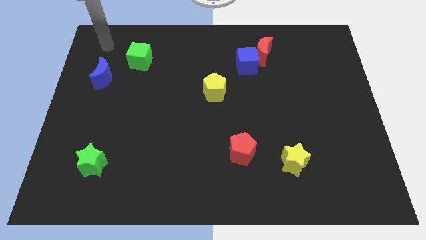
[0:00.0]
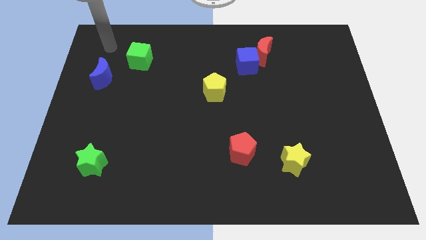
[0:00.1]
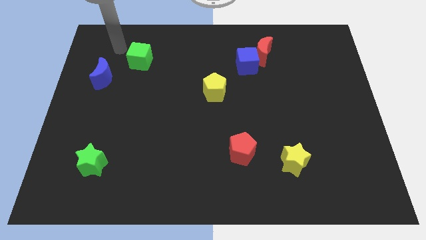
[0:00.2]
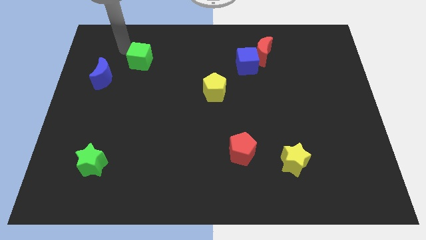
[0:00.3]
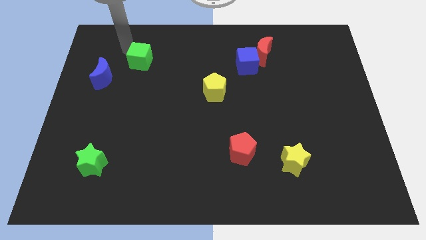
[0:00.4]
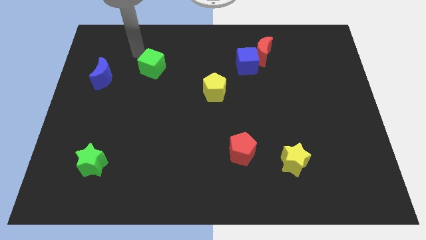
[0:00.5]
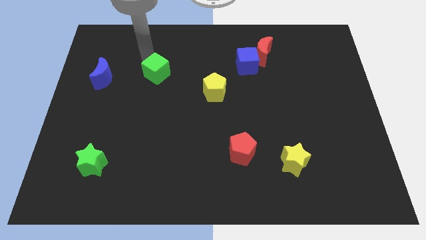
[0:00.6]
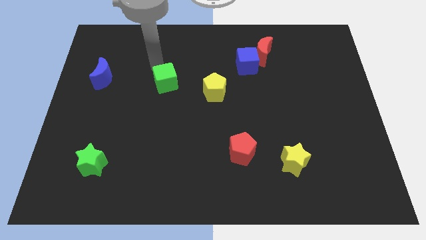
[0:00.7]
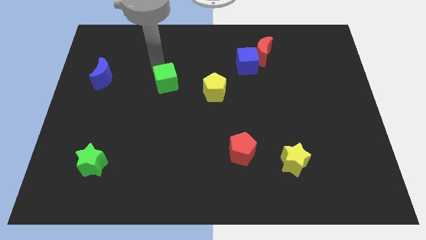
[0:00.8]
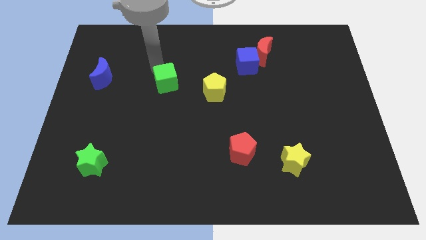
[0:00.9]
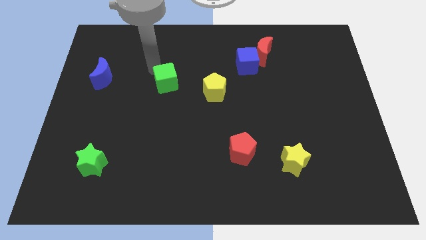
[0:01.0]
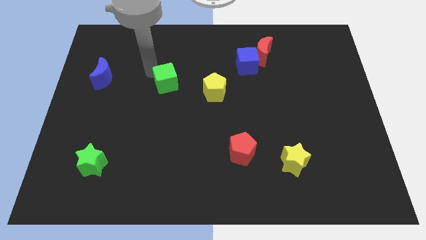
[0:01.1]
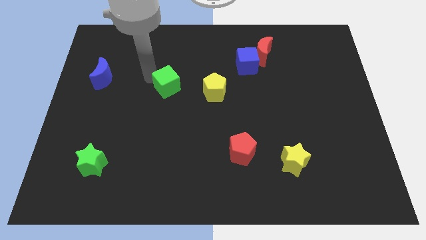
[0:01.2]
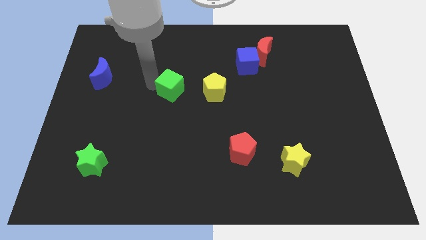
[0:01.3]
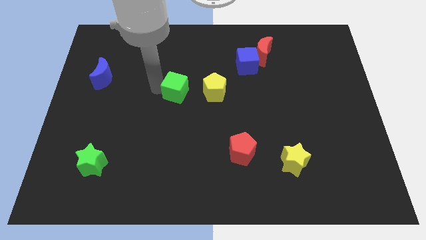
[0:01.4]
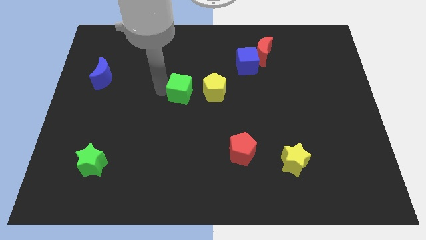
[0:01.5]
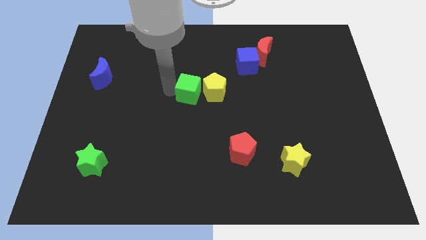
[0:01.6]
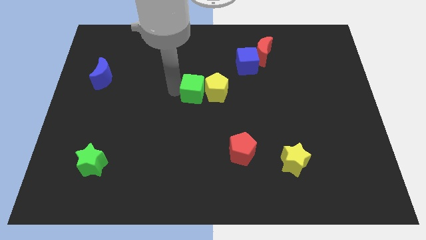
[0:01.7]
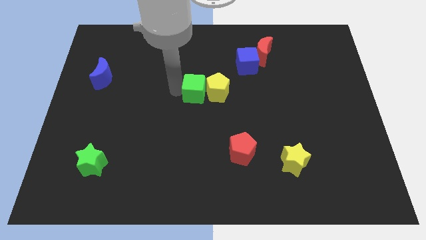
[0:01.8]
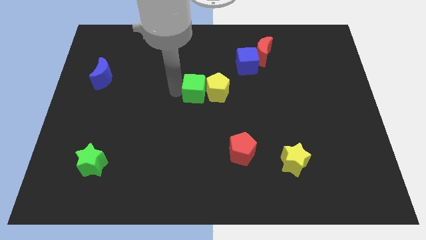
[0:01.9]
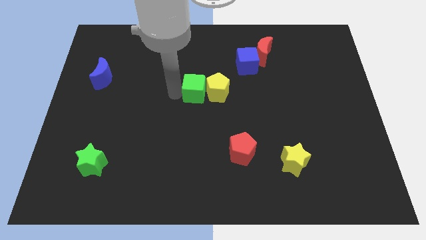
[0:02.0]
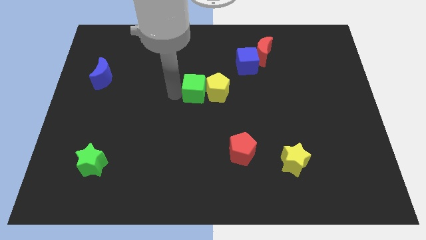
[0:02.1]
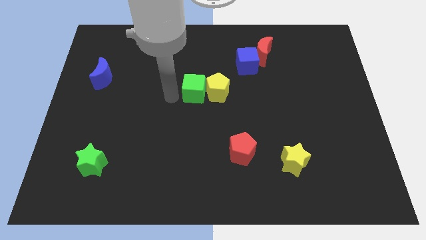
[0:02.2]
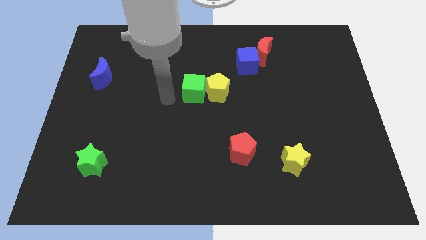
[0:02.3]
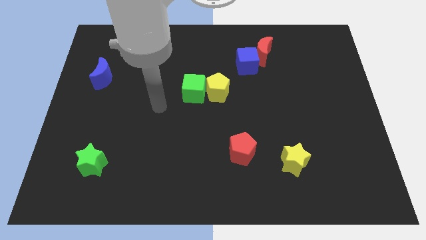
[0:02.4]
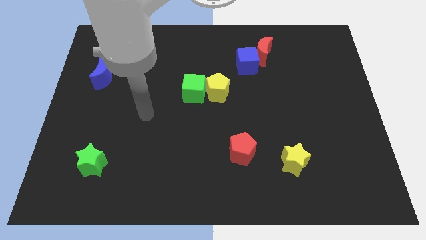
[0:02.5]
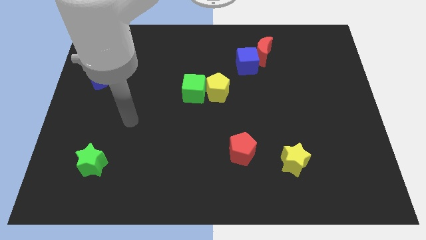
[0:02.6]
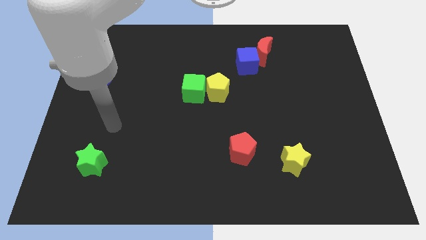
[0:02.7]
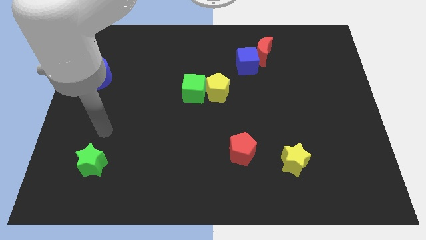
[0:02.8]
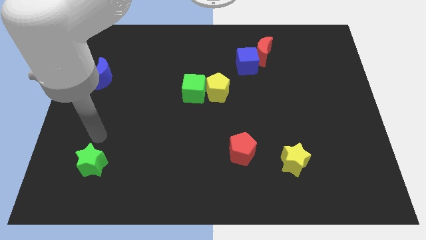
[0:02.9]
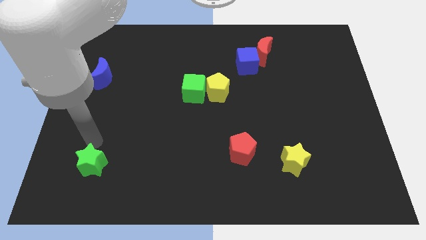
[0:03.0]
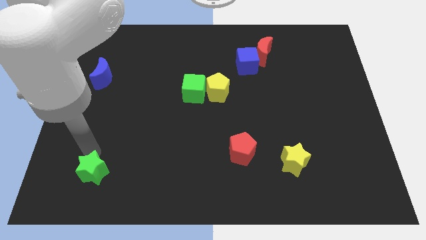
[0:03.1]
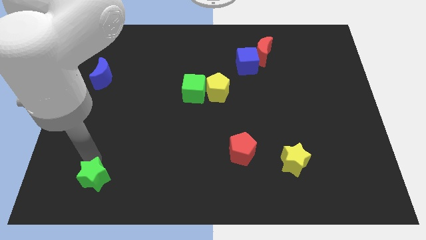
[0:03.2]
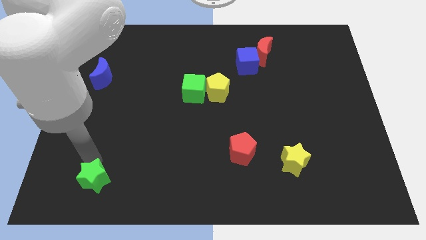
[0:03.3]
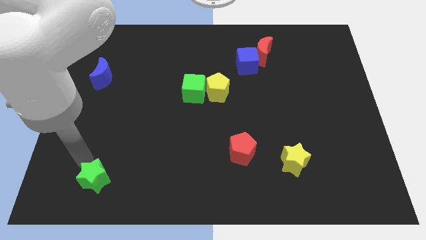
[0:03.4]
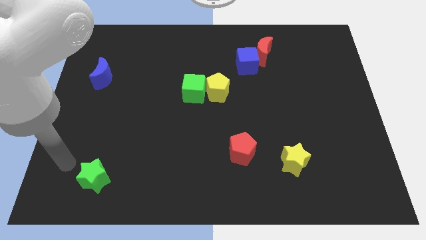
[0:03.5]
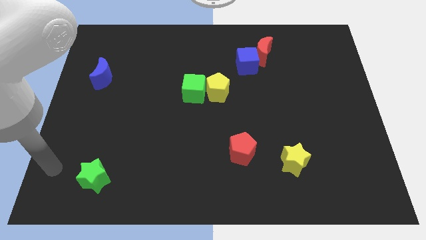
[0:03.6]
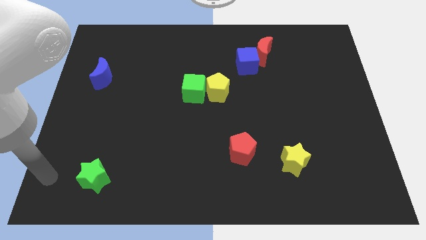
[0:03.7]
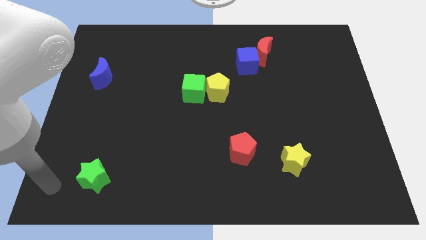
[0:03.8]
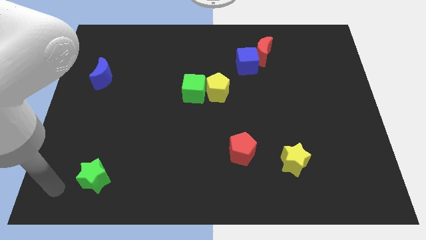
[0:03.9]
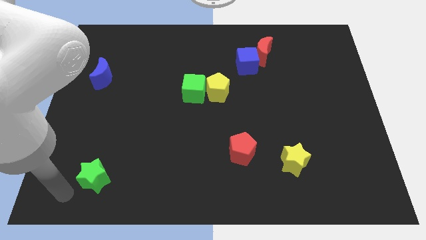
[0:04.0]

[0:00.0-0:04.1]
move the green cube into the yellow pentagon

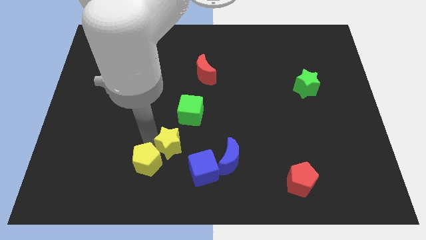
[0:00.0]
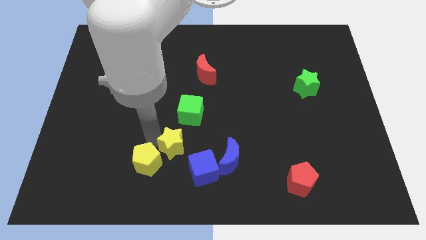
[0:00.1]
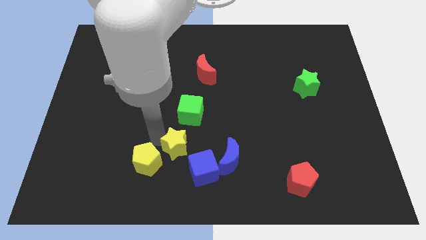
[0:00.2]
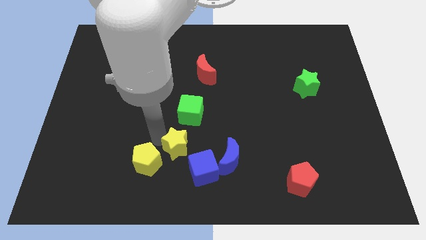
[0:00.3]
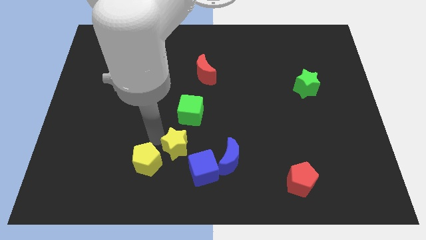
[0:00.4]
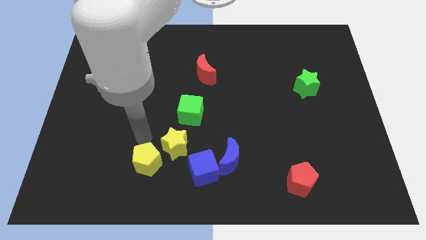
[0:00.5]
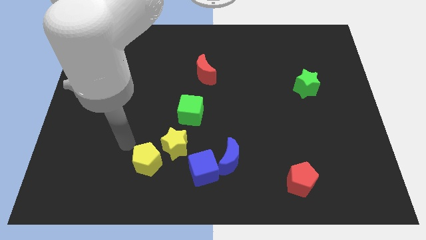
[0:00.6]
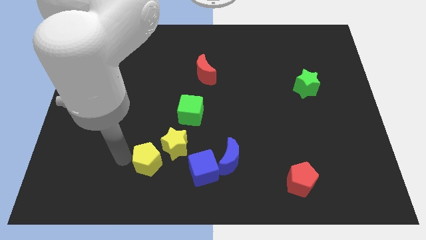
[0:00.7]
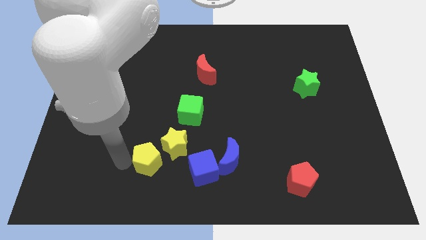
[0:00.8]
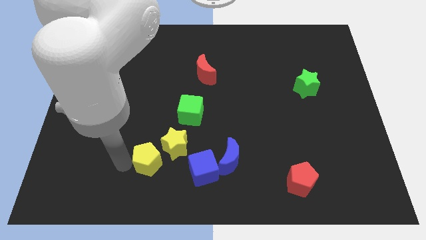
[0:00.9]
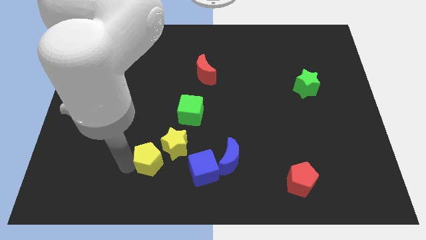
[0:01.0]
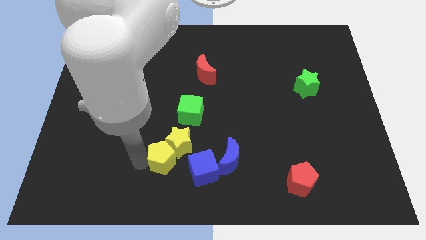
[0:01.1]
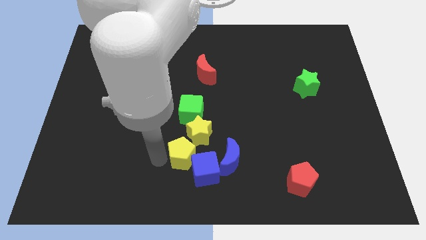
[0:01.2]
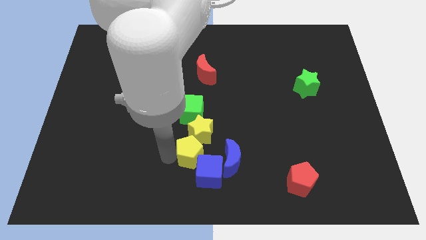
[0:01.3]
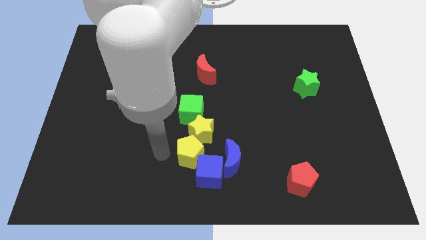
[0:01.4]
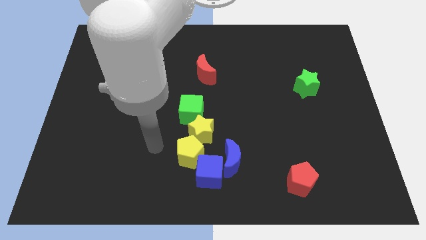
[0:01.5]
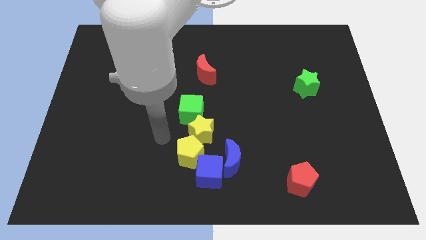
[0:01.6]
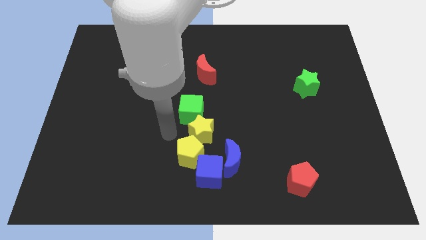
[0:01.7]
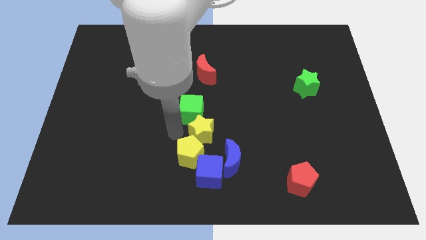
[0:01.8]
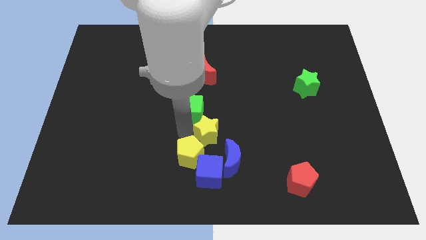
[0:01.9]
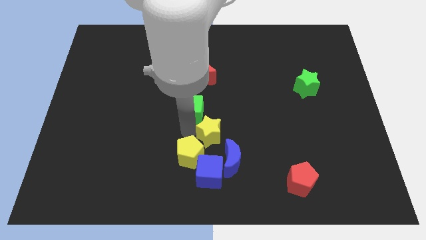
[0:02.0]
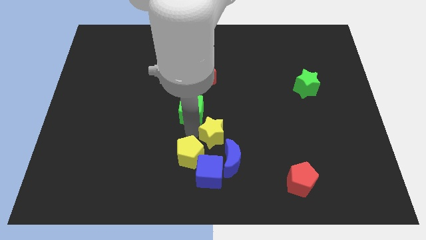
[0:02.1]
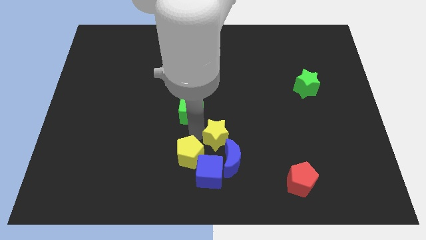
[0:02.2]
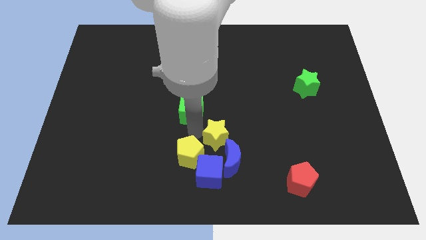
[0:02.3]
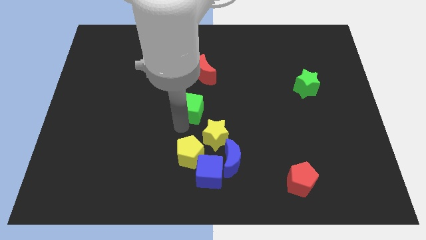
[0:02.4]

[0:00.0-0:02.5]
push the yellow pentagon into the yellow star

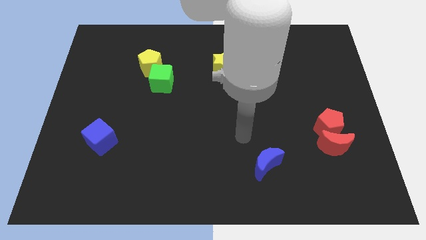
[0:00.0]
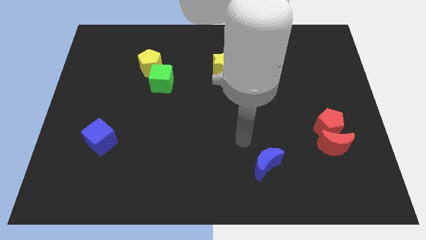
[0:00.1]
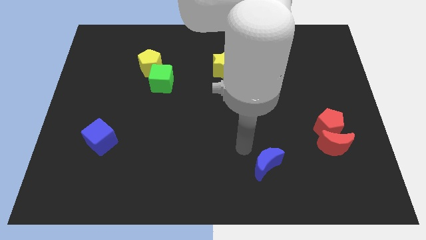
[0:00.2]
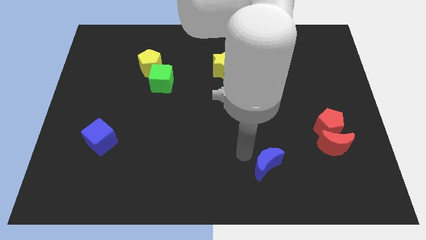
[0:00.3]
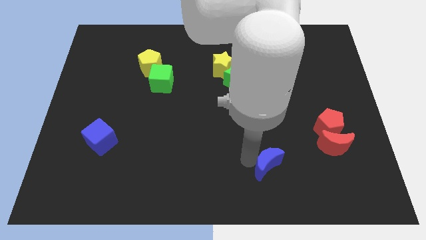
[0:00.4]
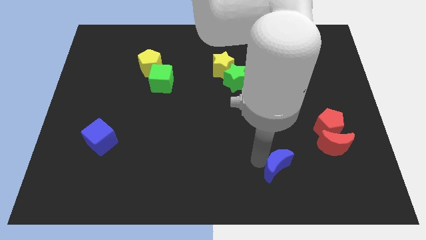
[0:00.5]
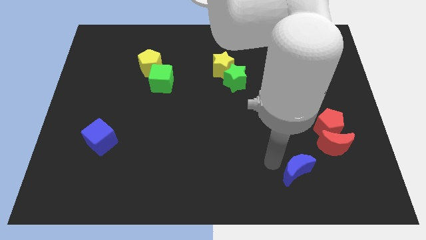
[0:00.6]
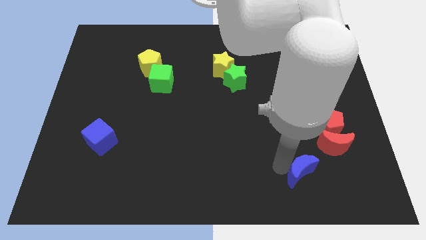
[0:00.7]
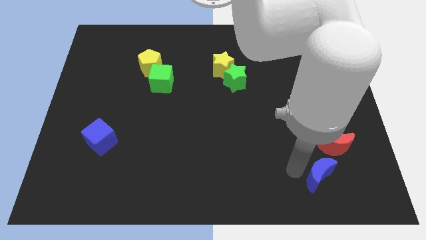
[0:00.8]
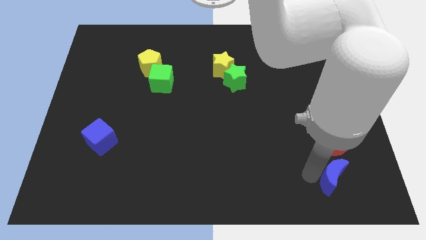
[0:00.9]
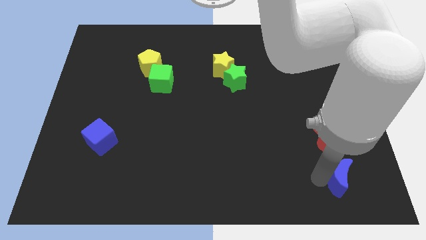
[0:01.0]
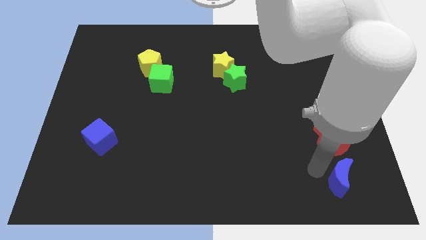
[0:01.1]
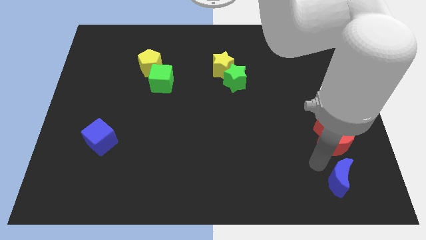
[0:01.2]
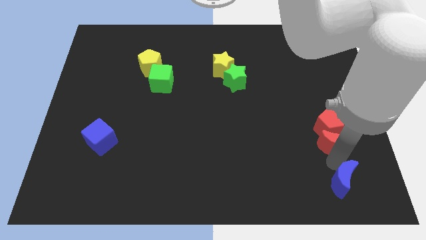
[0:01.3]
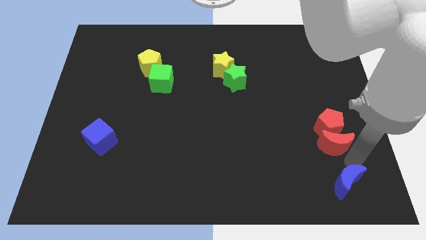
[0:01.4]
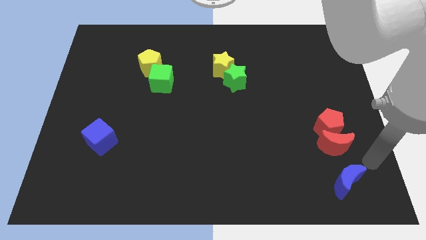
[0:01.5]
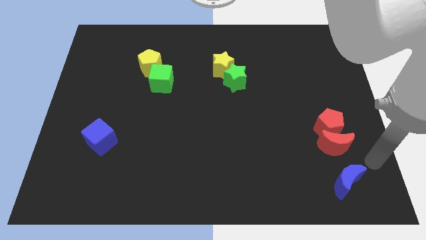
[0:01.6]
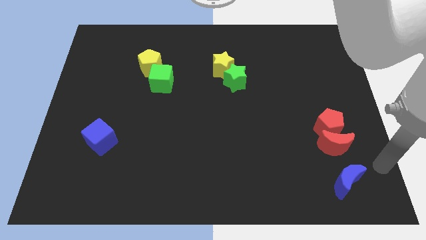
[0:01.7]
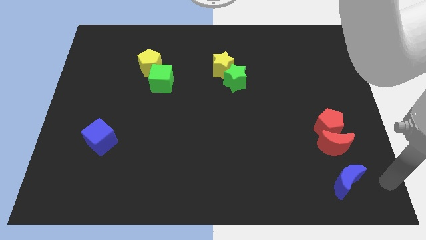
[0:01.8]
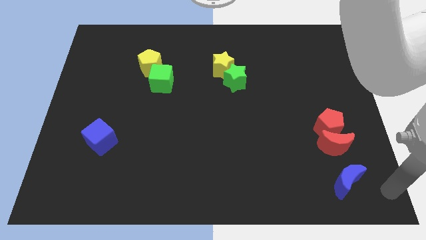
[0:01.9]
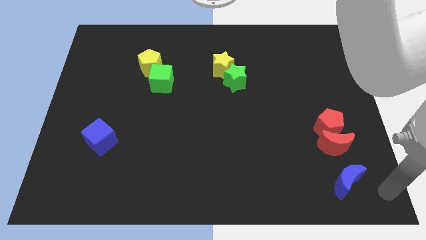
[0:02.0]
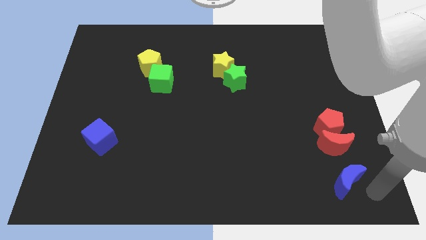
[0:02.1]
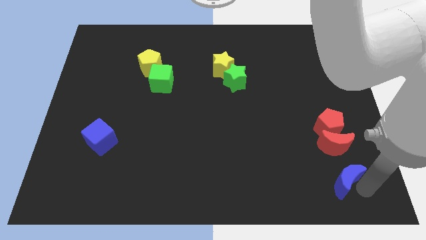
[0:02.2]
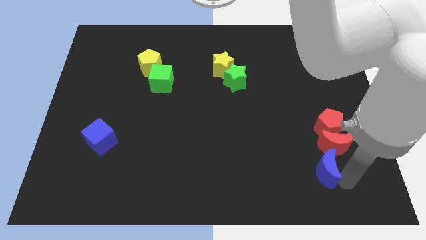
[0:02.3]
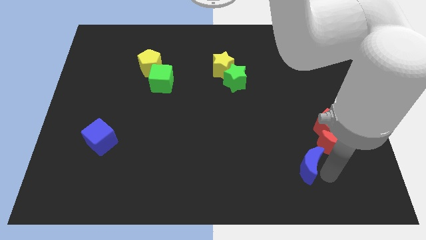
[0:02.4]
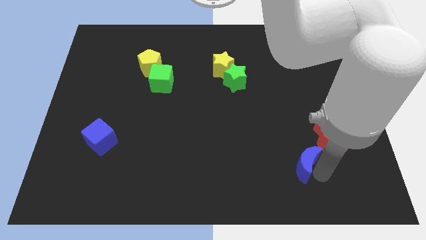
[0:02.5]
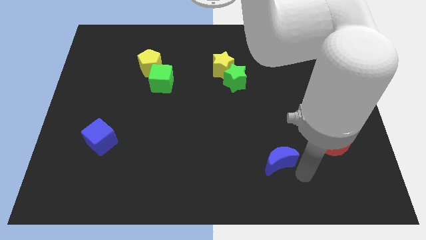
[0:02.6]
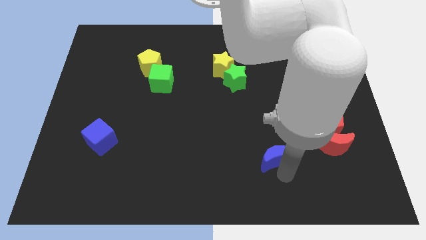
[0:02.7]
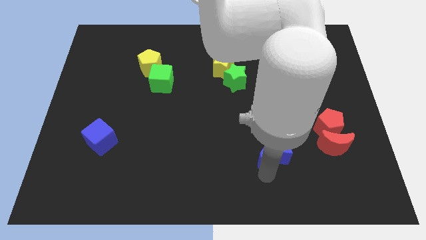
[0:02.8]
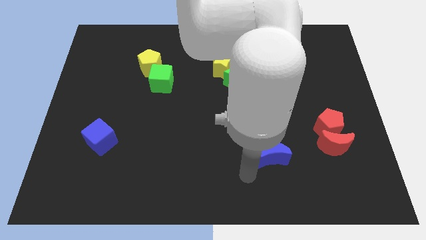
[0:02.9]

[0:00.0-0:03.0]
push the blue crescent slightly left side up
